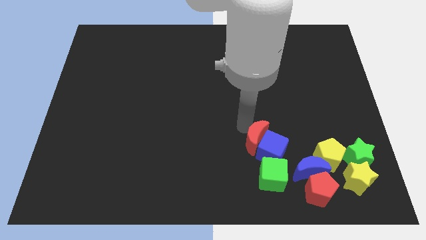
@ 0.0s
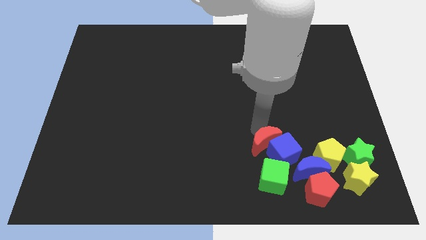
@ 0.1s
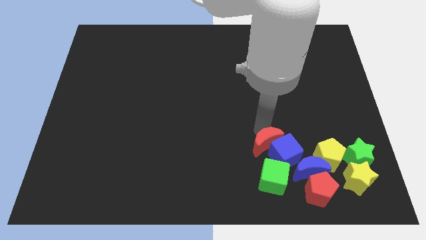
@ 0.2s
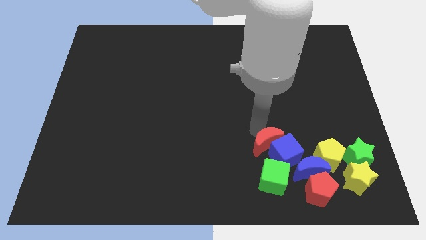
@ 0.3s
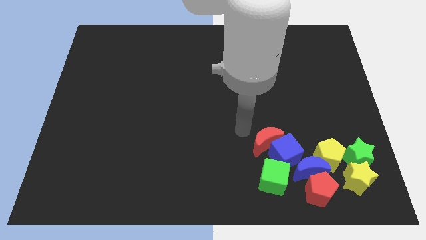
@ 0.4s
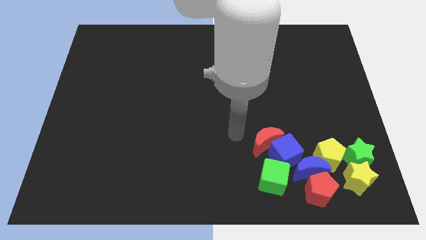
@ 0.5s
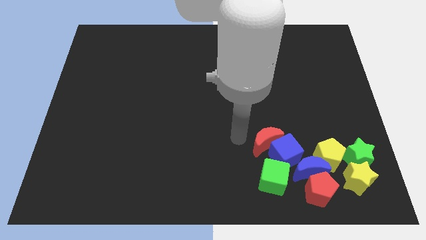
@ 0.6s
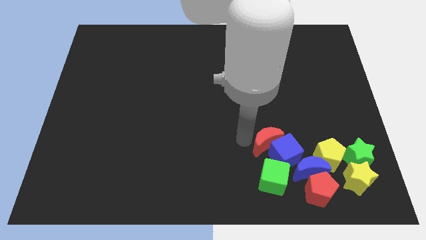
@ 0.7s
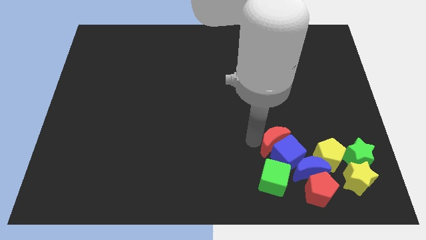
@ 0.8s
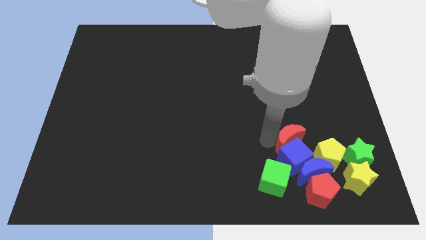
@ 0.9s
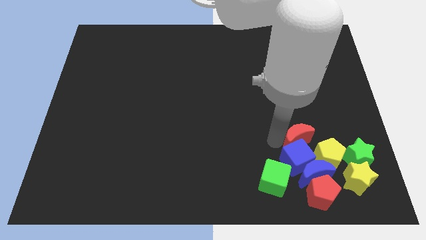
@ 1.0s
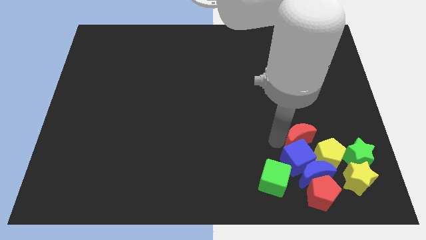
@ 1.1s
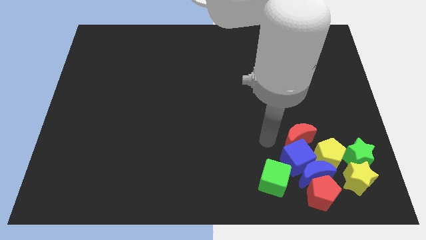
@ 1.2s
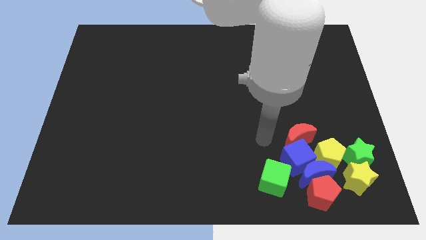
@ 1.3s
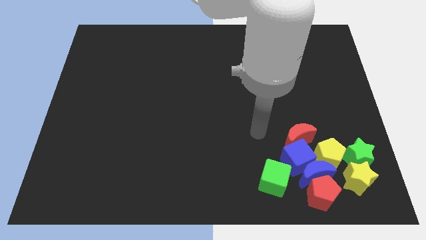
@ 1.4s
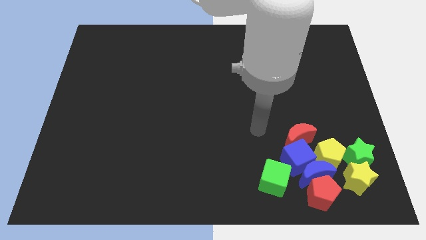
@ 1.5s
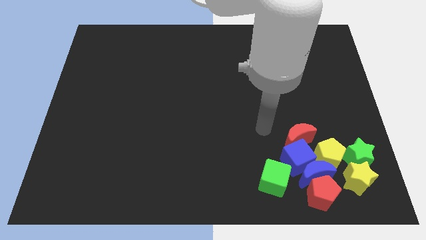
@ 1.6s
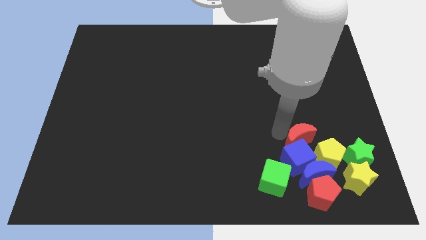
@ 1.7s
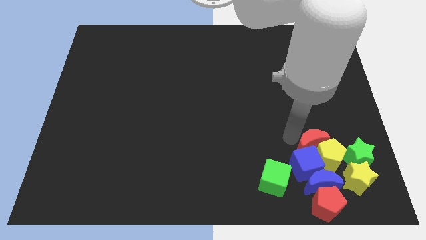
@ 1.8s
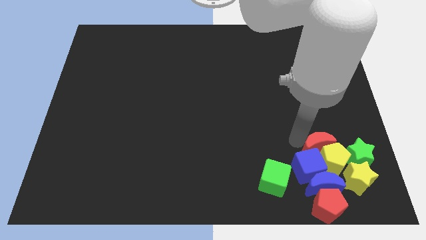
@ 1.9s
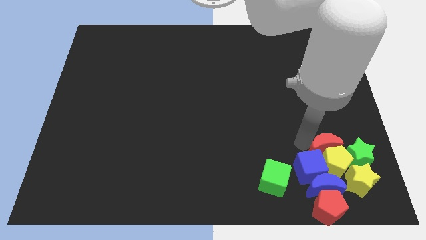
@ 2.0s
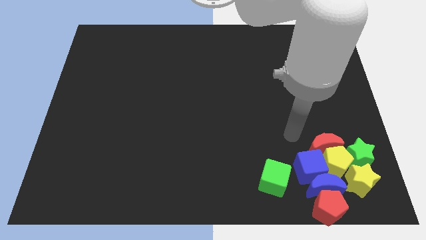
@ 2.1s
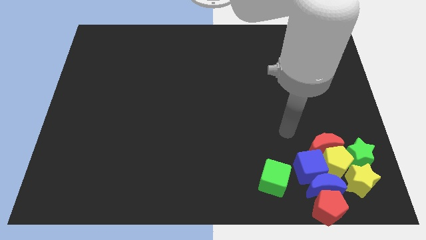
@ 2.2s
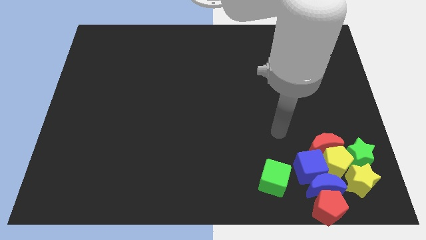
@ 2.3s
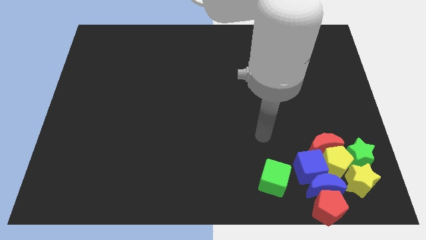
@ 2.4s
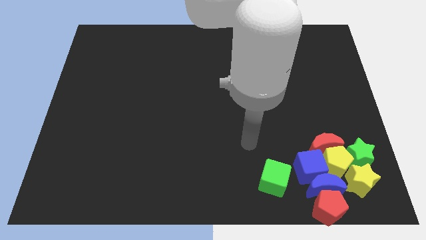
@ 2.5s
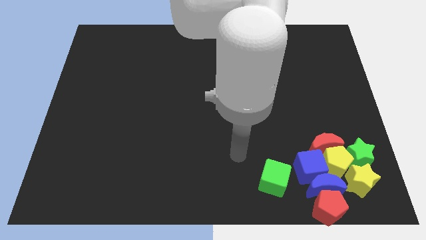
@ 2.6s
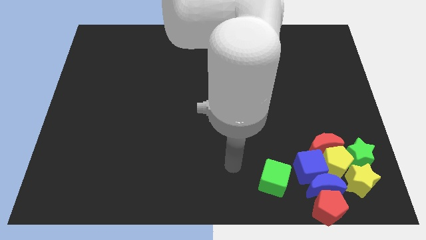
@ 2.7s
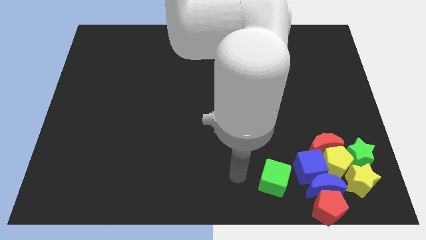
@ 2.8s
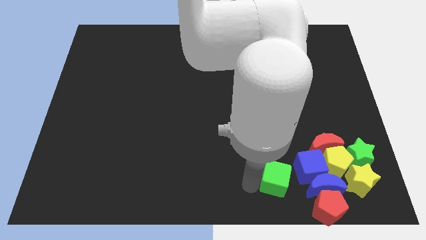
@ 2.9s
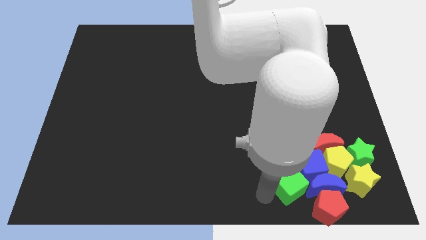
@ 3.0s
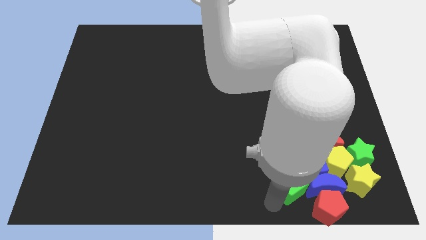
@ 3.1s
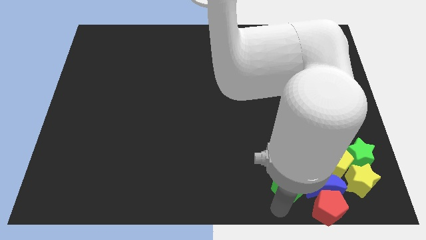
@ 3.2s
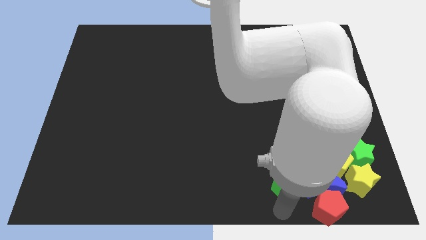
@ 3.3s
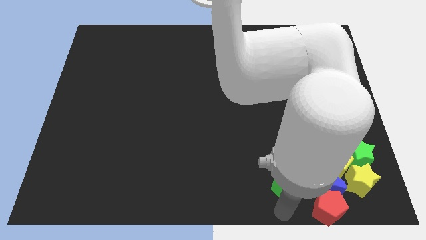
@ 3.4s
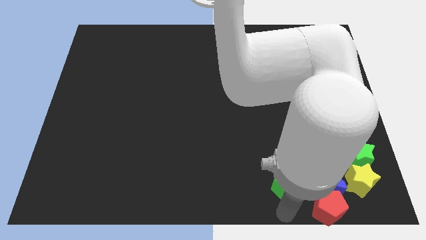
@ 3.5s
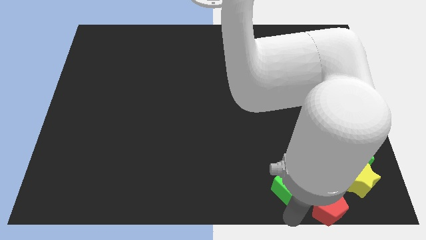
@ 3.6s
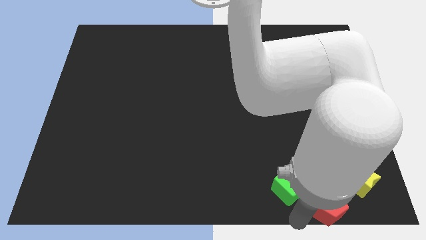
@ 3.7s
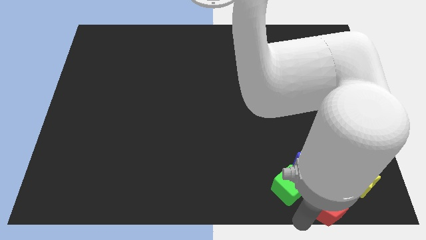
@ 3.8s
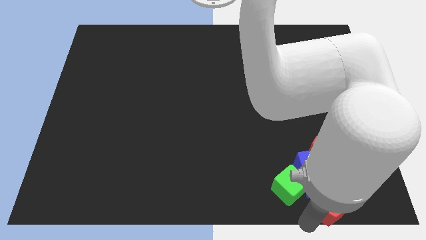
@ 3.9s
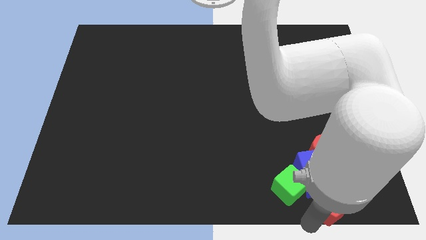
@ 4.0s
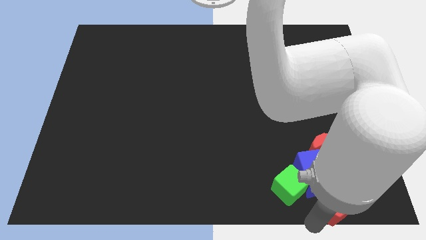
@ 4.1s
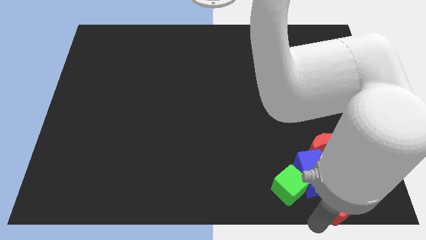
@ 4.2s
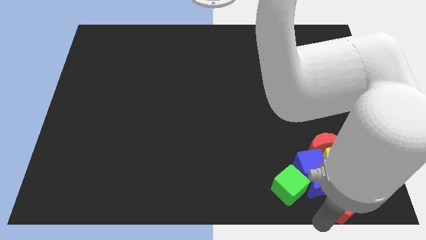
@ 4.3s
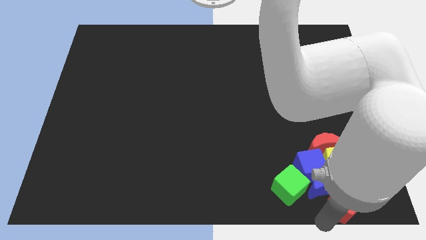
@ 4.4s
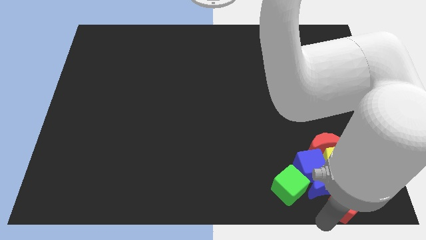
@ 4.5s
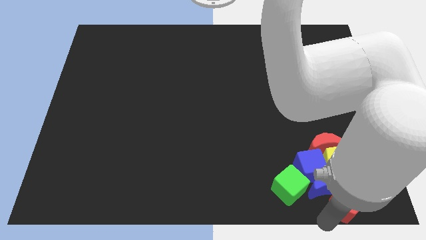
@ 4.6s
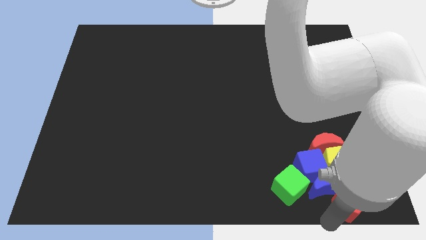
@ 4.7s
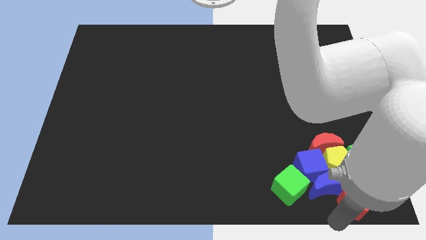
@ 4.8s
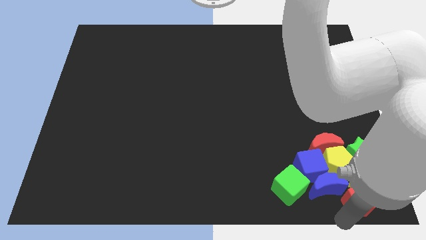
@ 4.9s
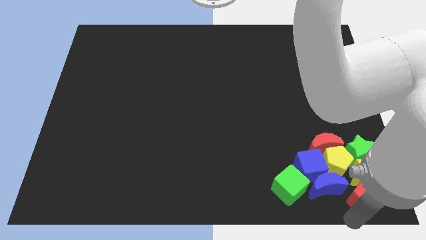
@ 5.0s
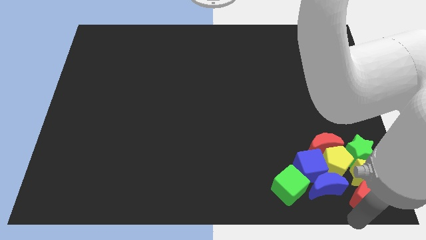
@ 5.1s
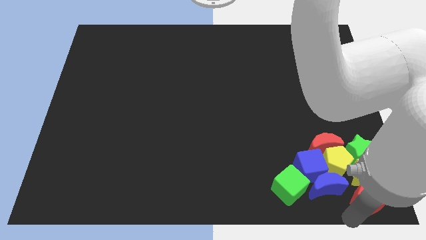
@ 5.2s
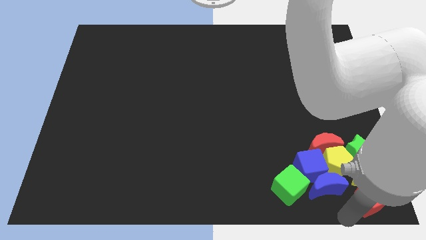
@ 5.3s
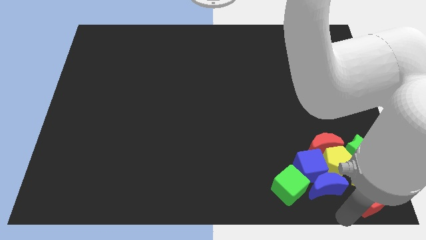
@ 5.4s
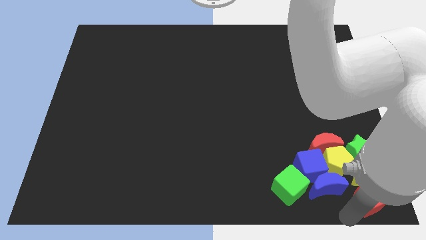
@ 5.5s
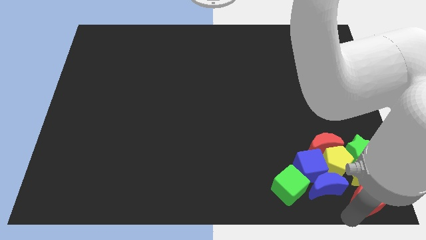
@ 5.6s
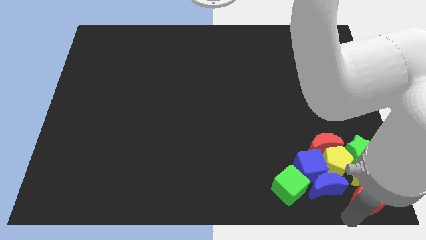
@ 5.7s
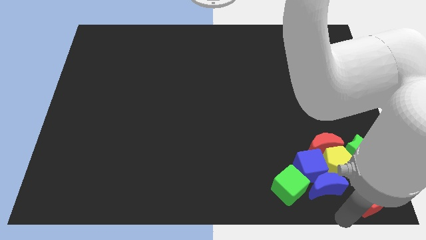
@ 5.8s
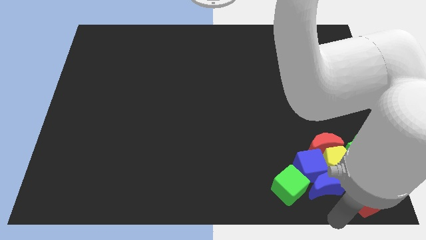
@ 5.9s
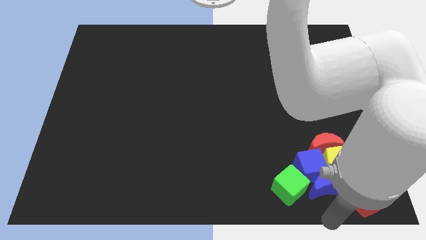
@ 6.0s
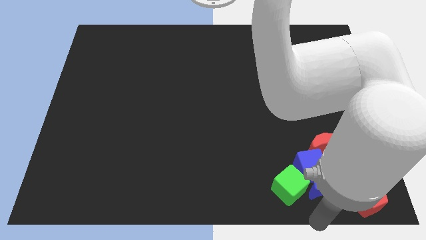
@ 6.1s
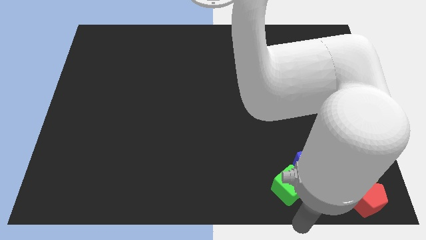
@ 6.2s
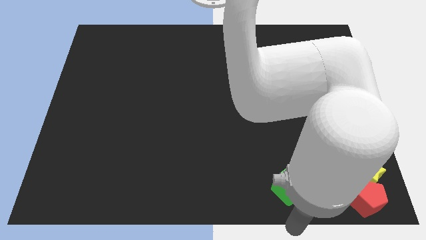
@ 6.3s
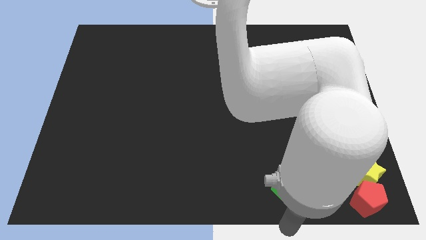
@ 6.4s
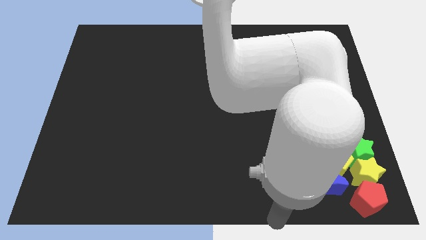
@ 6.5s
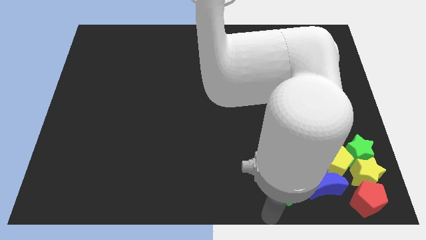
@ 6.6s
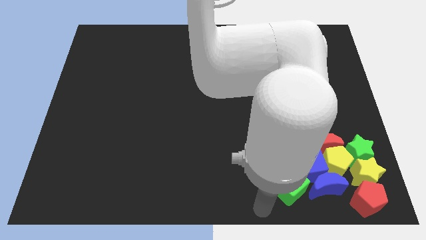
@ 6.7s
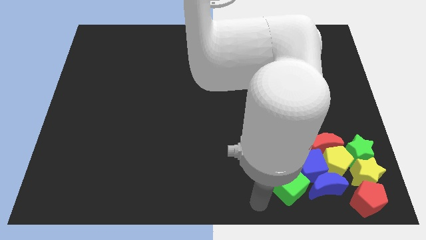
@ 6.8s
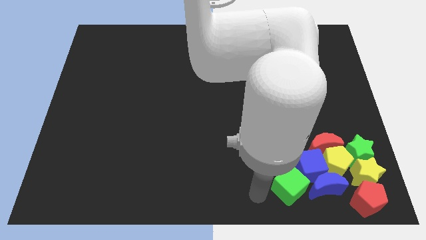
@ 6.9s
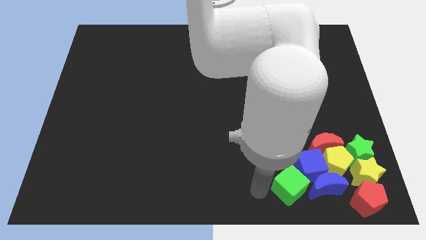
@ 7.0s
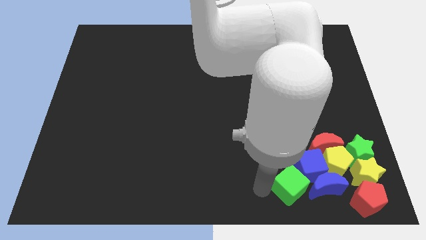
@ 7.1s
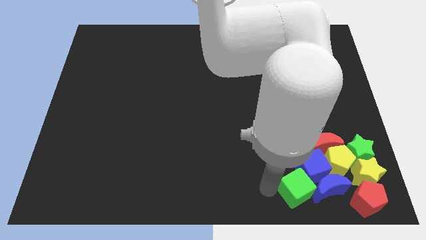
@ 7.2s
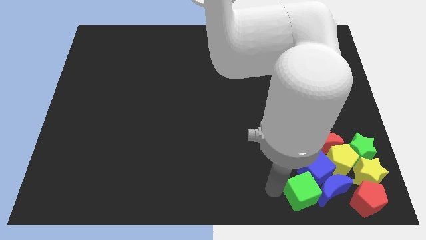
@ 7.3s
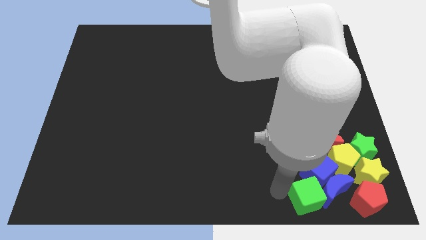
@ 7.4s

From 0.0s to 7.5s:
move the group of blocks towards the bottom right corner of the board

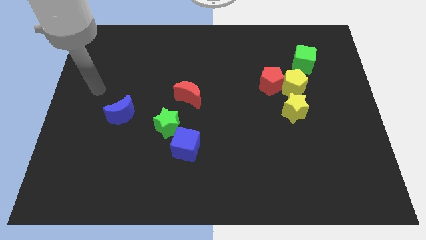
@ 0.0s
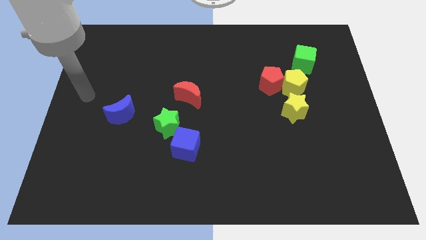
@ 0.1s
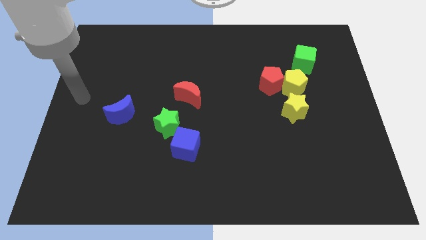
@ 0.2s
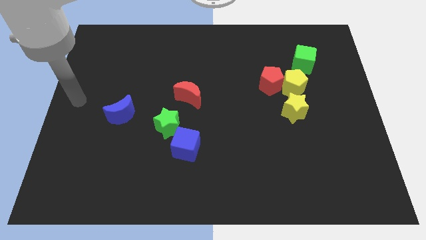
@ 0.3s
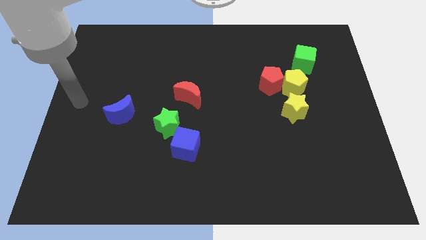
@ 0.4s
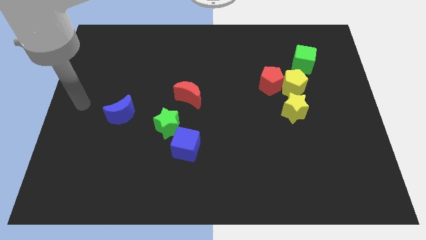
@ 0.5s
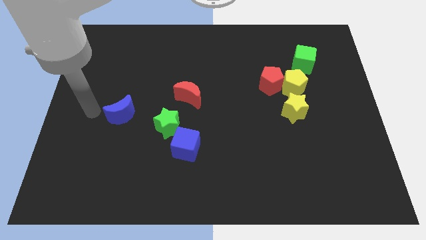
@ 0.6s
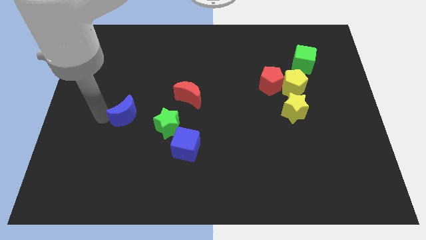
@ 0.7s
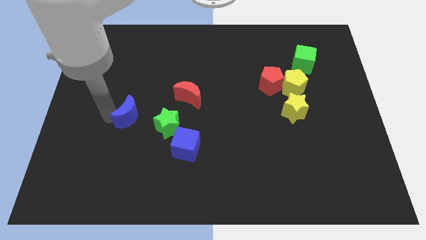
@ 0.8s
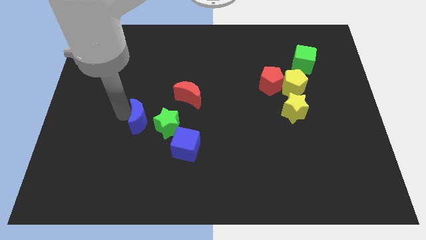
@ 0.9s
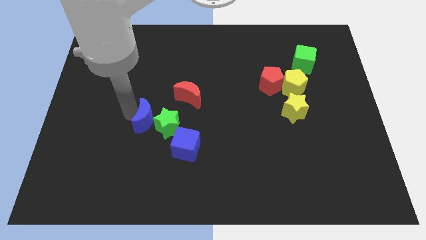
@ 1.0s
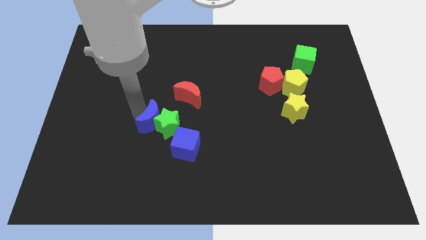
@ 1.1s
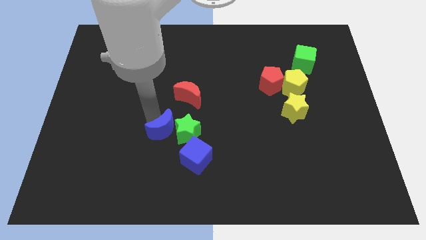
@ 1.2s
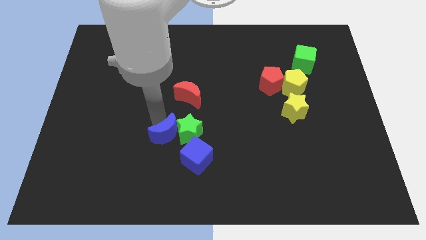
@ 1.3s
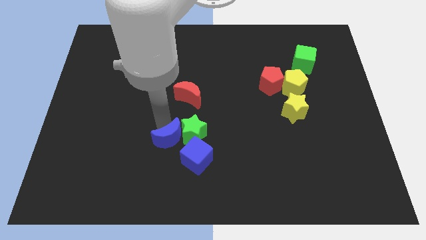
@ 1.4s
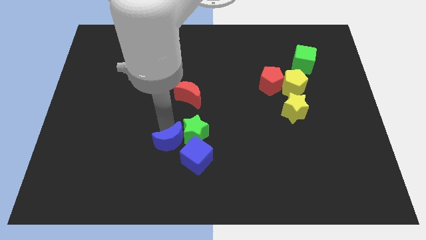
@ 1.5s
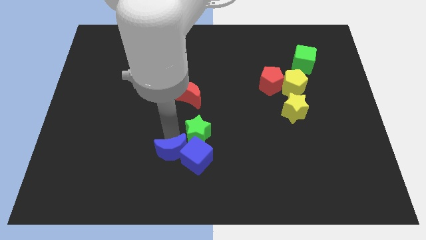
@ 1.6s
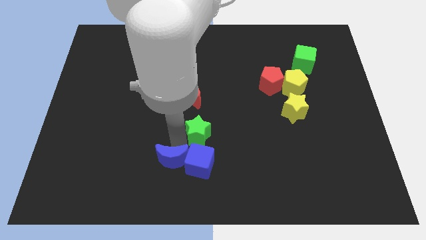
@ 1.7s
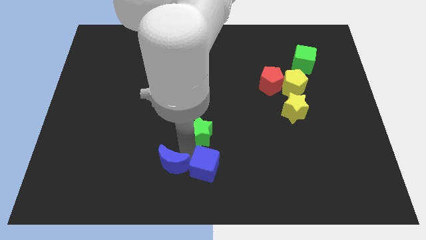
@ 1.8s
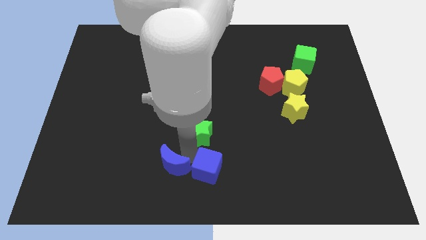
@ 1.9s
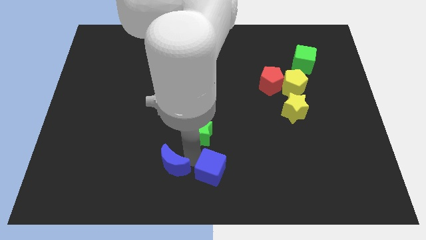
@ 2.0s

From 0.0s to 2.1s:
push the blue crescent and blue cube towards bottom
